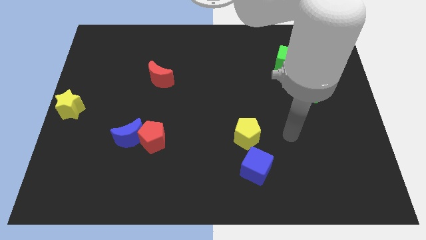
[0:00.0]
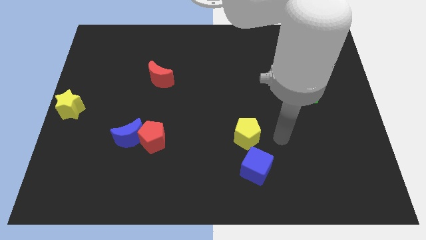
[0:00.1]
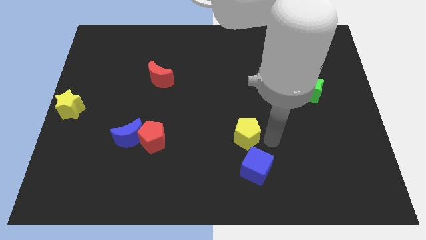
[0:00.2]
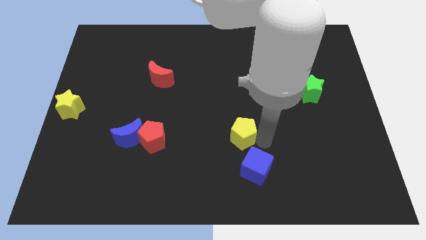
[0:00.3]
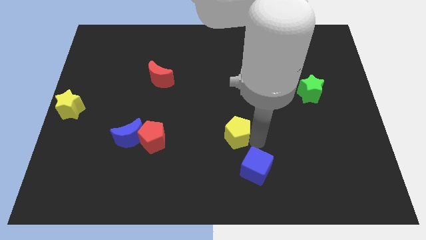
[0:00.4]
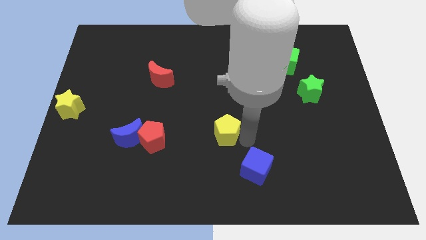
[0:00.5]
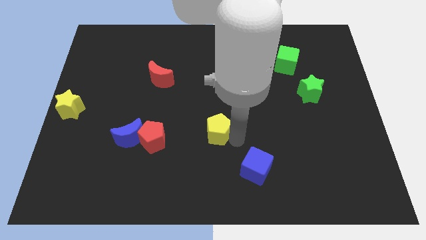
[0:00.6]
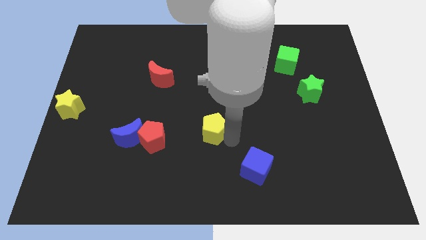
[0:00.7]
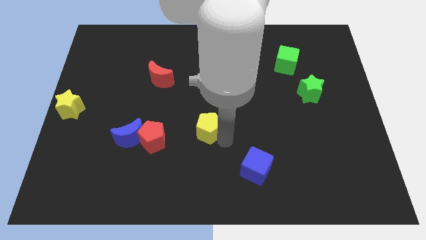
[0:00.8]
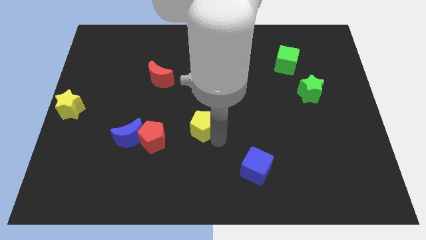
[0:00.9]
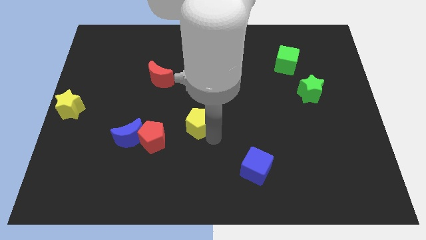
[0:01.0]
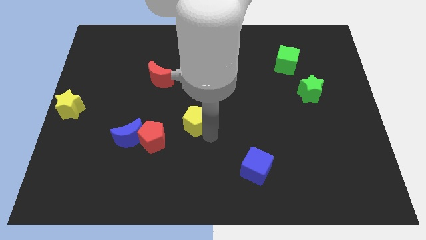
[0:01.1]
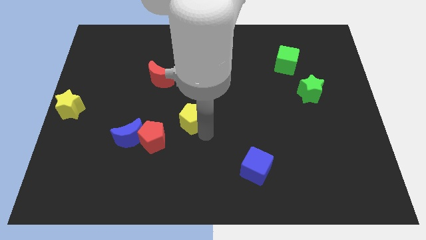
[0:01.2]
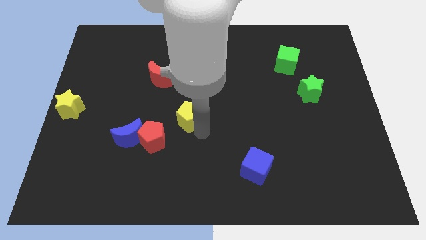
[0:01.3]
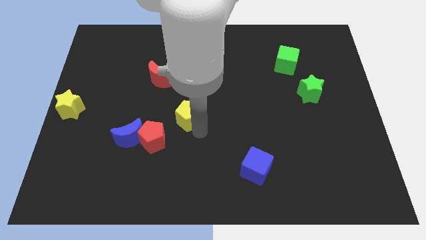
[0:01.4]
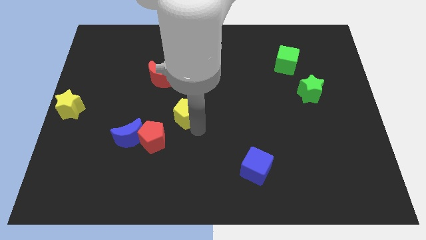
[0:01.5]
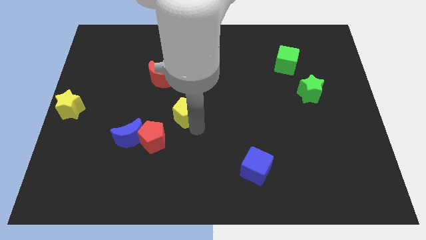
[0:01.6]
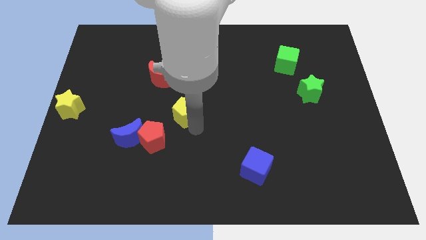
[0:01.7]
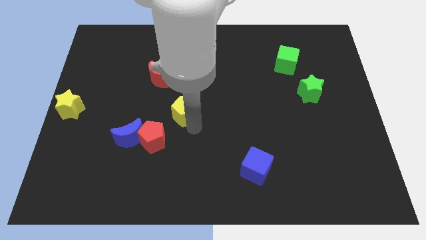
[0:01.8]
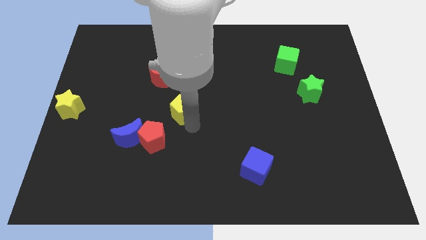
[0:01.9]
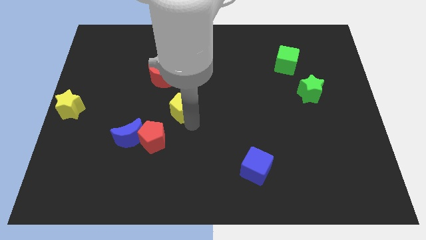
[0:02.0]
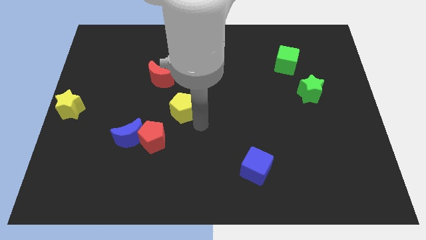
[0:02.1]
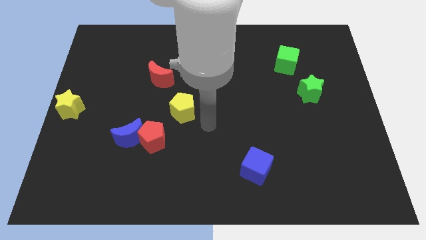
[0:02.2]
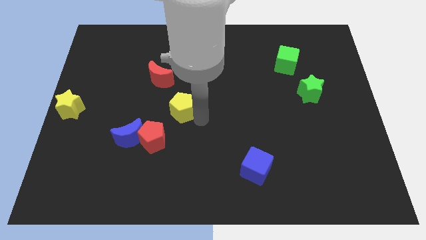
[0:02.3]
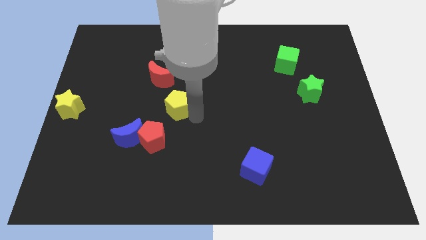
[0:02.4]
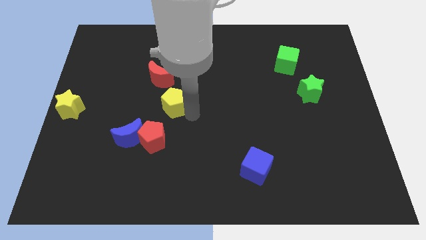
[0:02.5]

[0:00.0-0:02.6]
move the yellow pentagon to the top right of the red pentagon

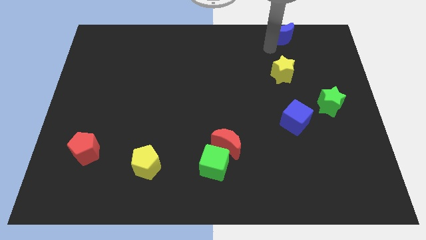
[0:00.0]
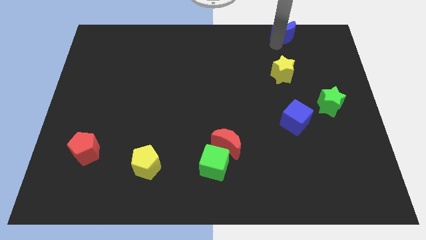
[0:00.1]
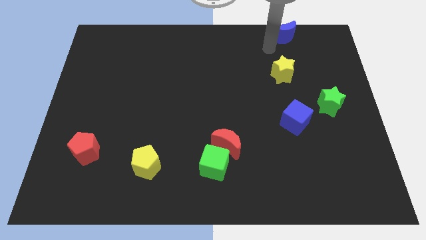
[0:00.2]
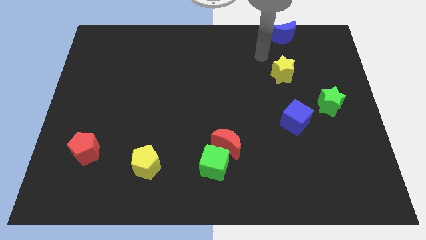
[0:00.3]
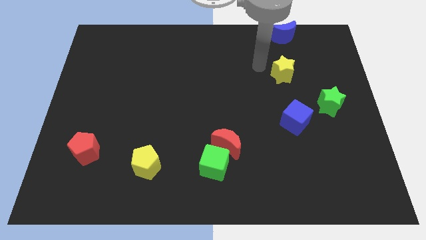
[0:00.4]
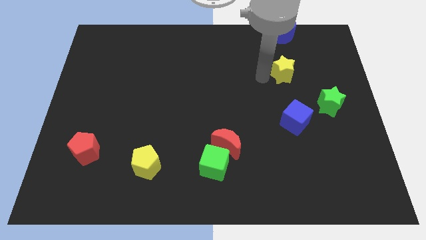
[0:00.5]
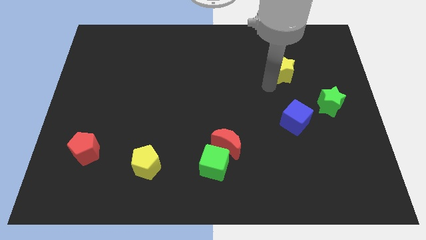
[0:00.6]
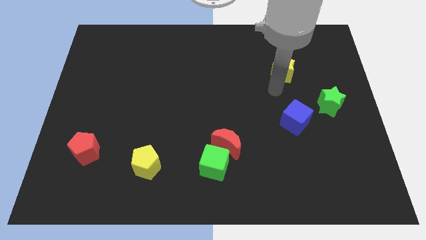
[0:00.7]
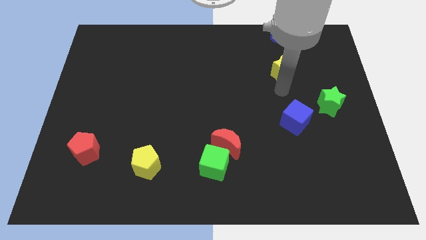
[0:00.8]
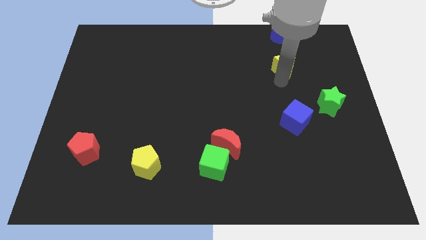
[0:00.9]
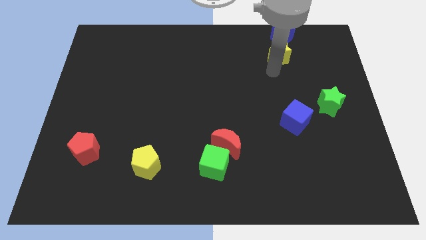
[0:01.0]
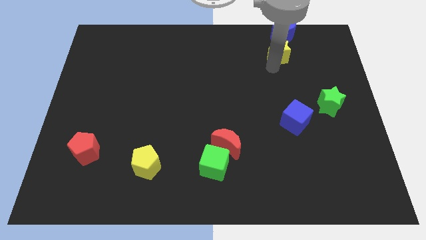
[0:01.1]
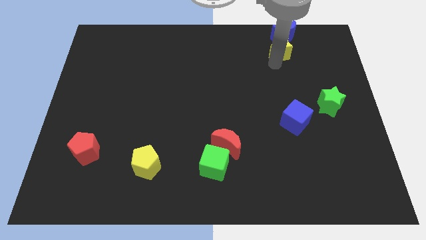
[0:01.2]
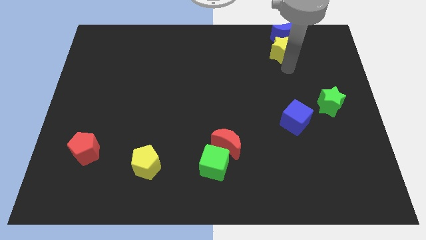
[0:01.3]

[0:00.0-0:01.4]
push the yellow star near to the blue moon

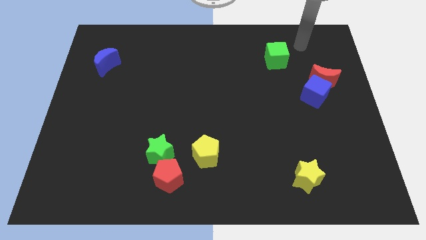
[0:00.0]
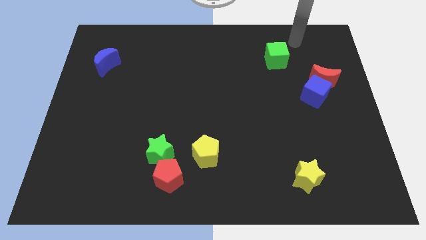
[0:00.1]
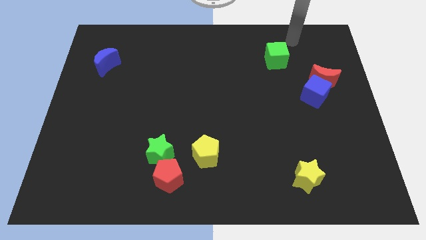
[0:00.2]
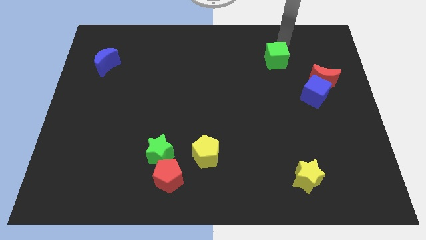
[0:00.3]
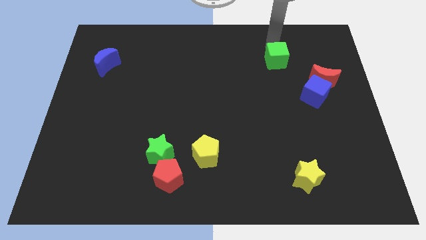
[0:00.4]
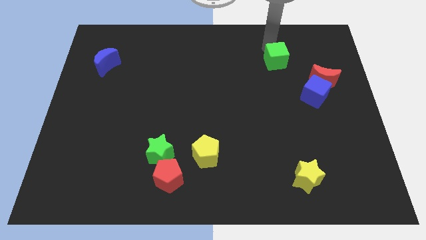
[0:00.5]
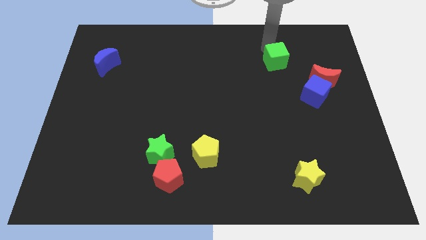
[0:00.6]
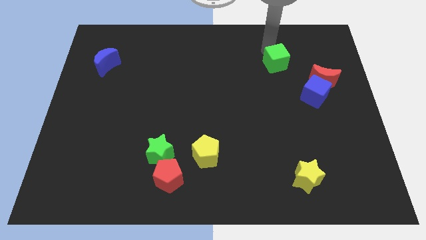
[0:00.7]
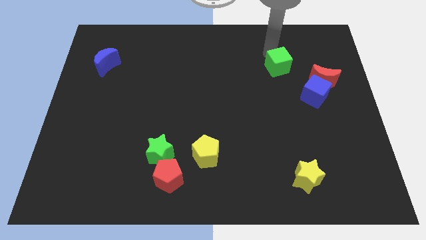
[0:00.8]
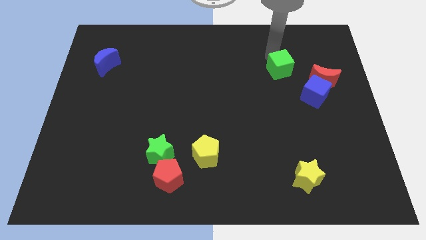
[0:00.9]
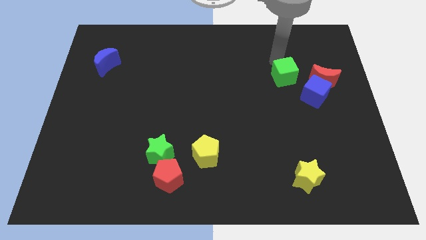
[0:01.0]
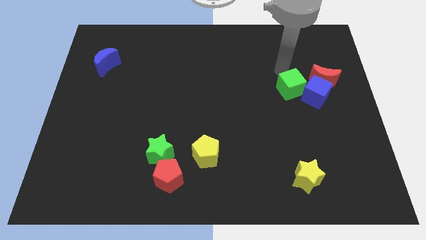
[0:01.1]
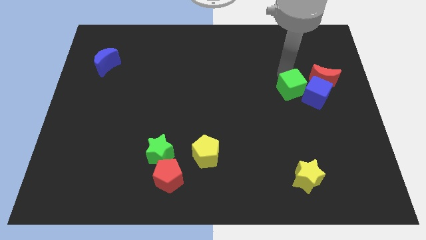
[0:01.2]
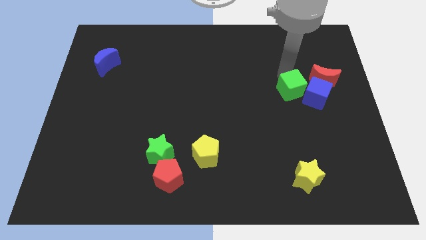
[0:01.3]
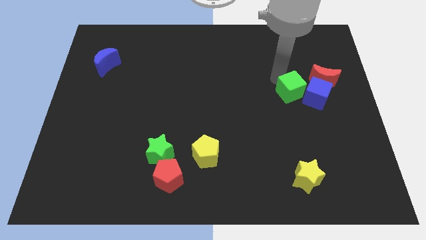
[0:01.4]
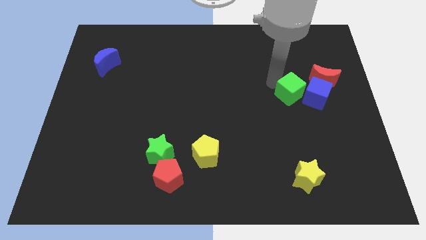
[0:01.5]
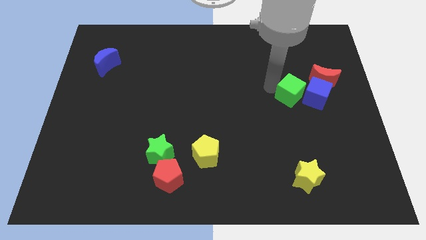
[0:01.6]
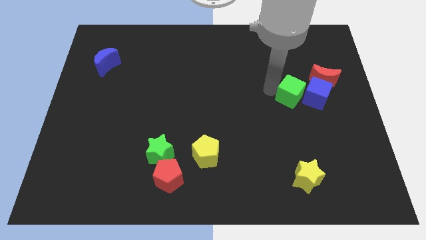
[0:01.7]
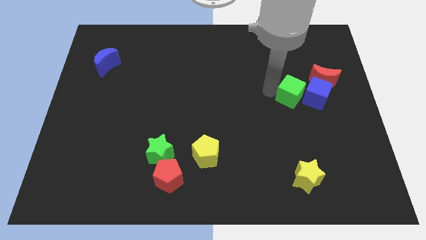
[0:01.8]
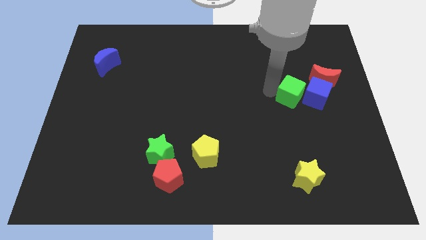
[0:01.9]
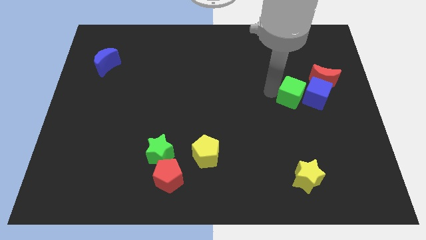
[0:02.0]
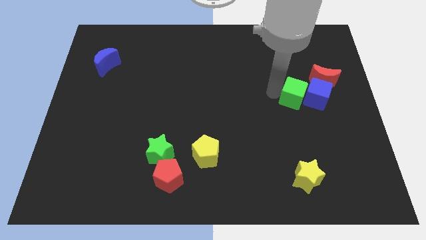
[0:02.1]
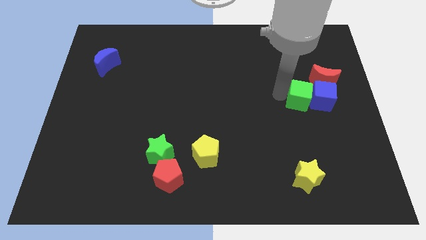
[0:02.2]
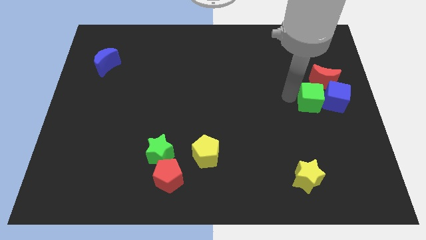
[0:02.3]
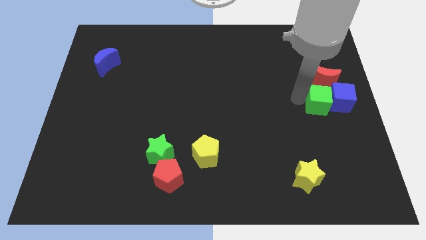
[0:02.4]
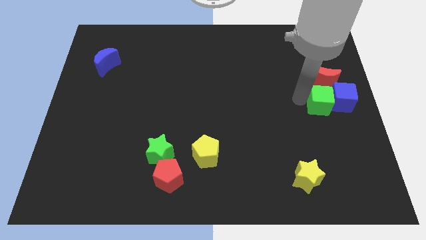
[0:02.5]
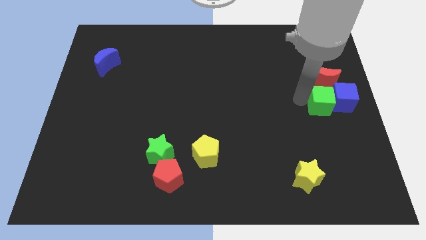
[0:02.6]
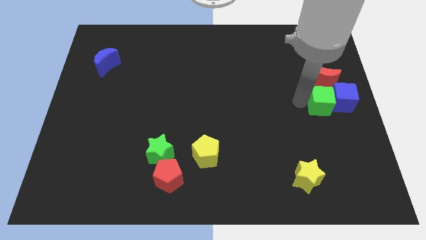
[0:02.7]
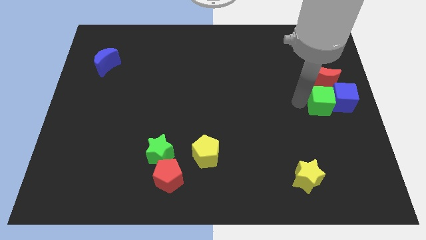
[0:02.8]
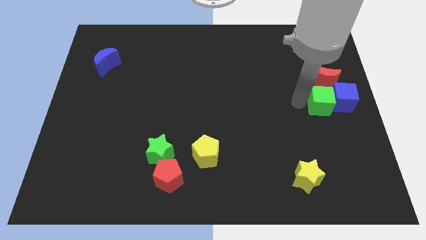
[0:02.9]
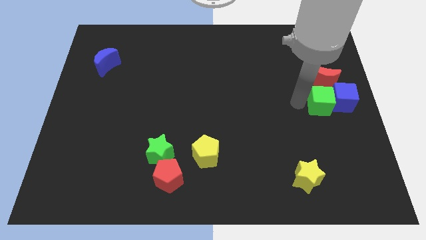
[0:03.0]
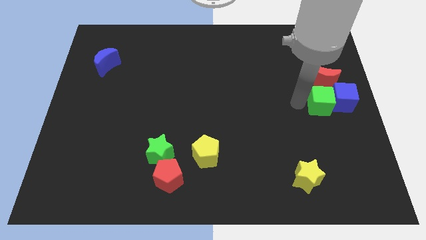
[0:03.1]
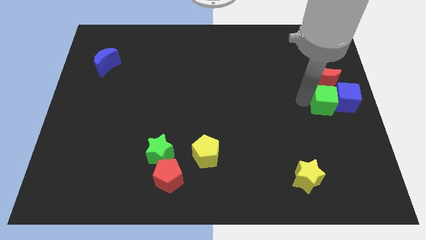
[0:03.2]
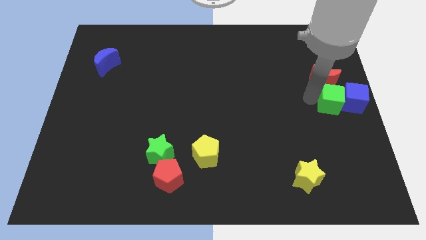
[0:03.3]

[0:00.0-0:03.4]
push green cube at the bottom of red moon

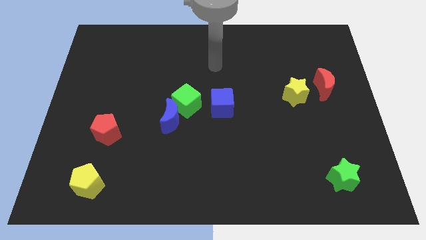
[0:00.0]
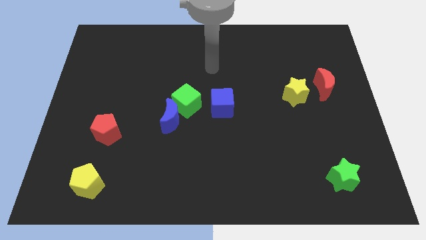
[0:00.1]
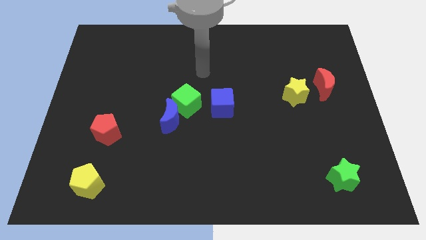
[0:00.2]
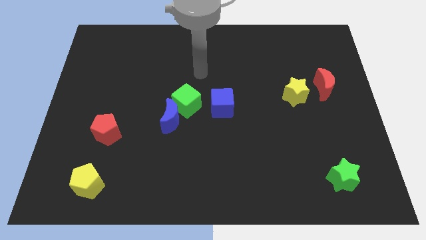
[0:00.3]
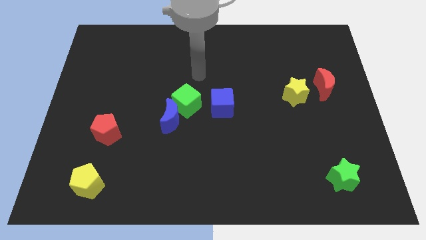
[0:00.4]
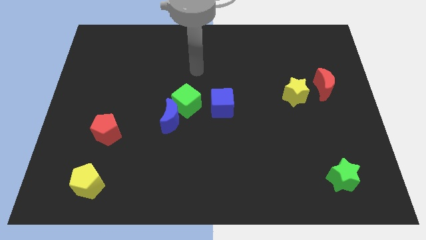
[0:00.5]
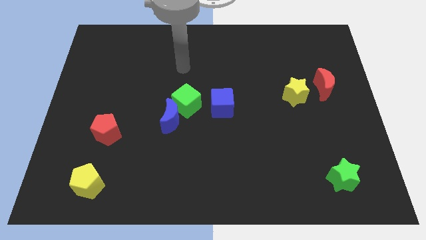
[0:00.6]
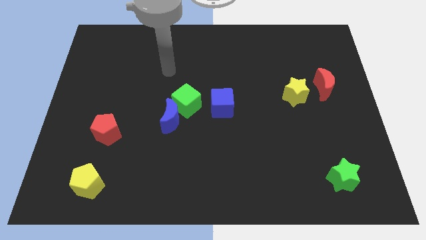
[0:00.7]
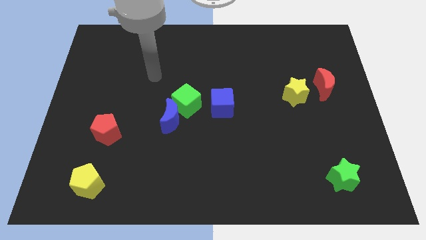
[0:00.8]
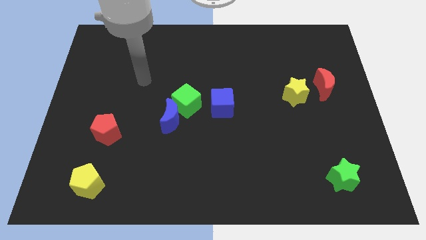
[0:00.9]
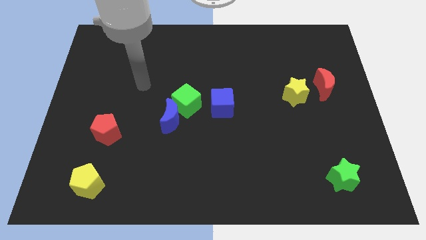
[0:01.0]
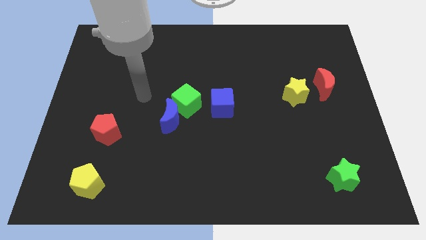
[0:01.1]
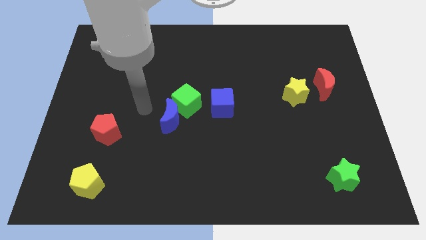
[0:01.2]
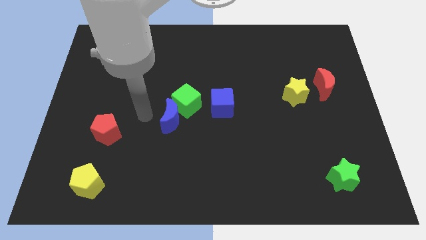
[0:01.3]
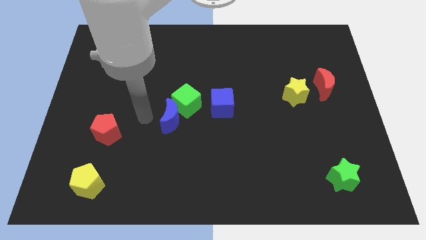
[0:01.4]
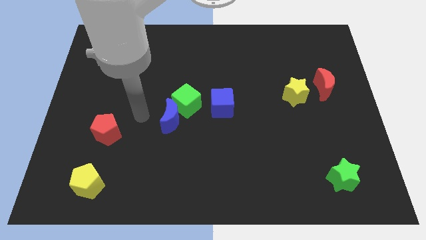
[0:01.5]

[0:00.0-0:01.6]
place arm in between red pentagon and blue moon
